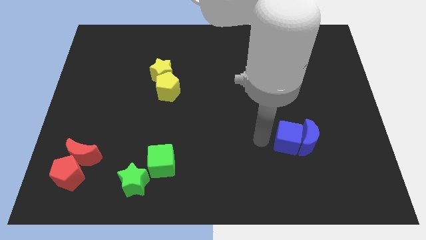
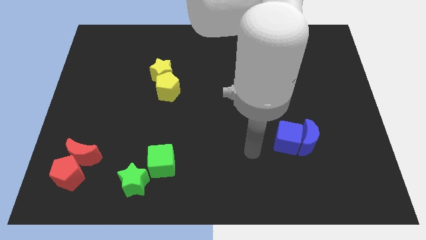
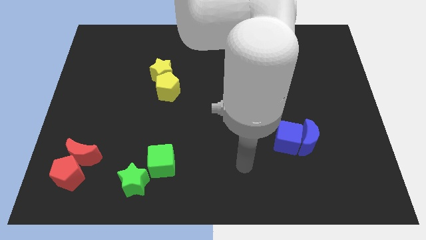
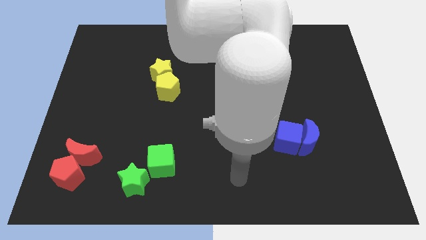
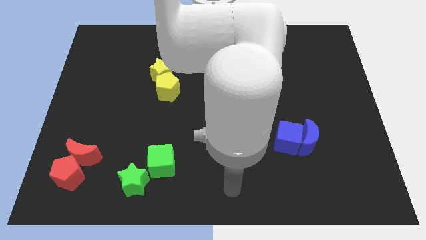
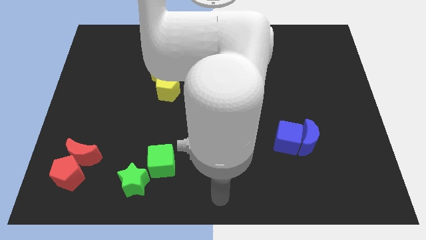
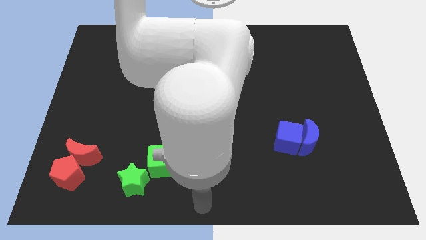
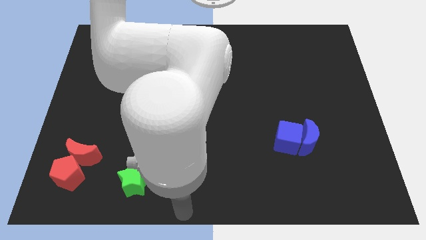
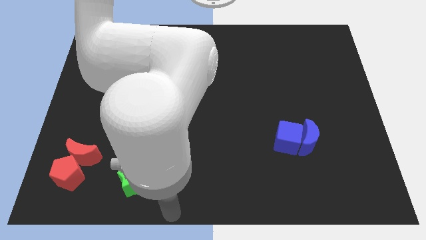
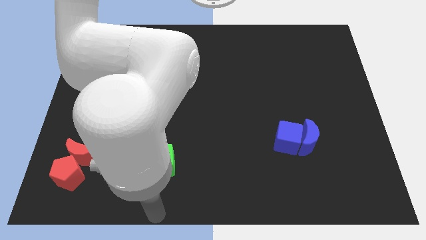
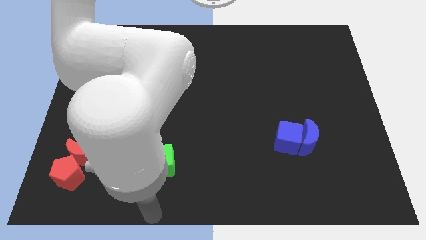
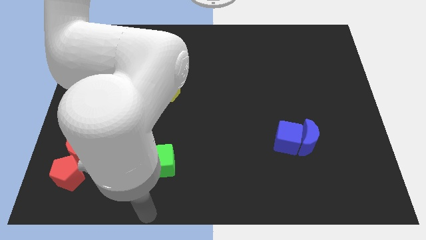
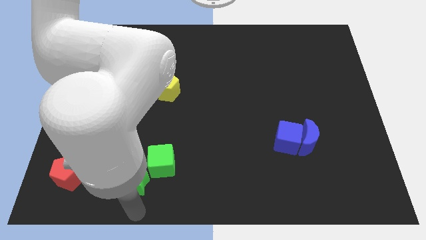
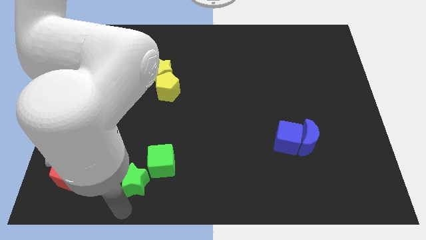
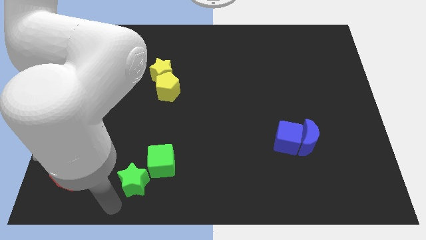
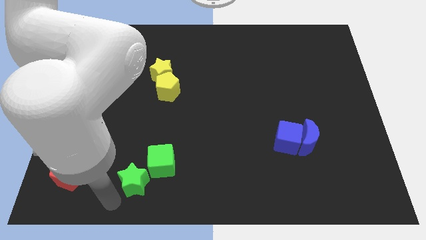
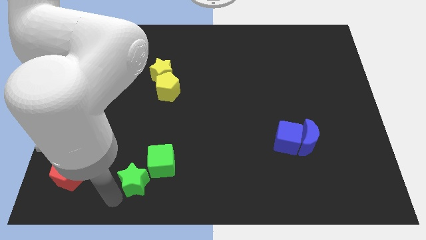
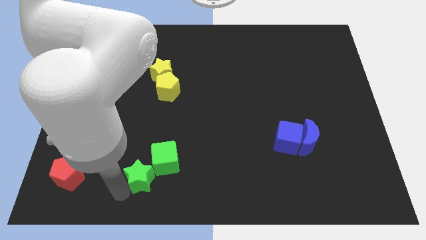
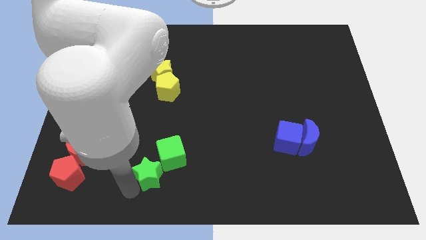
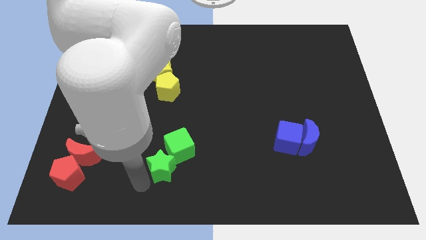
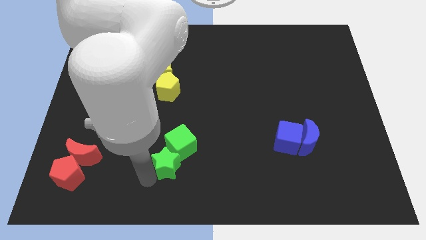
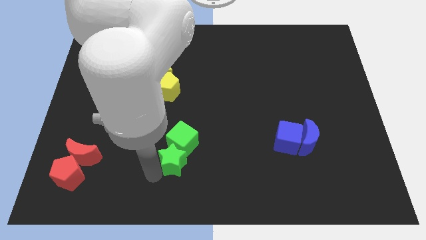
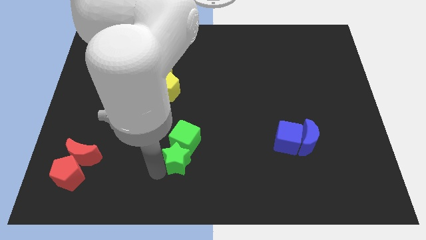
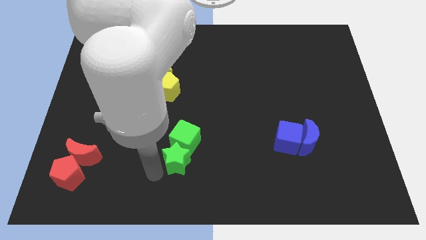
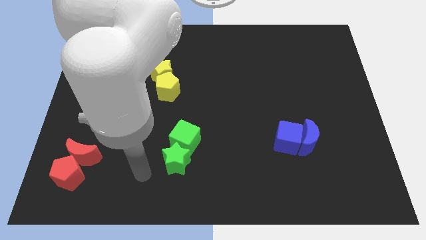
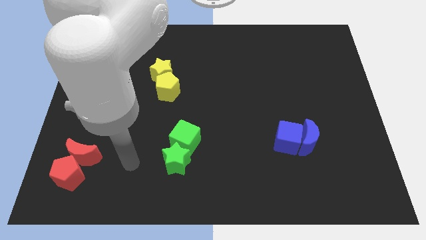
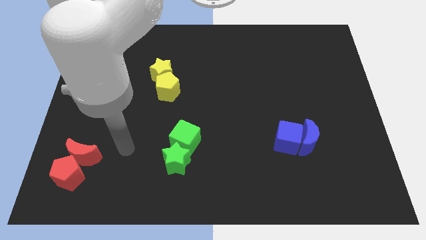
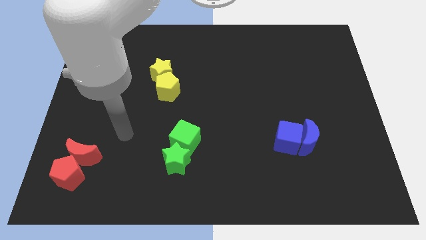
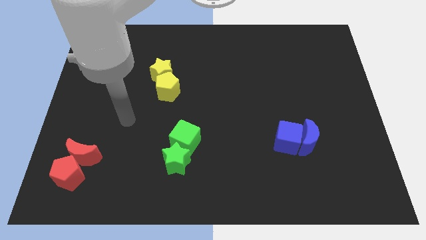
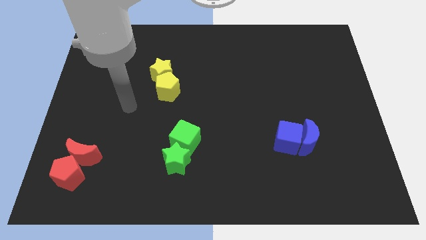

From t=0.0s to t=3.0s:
move the green blocks to the top of the board

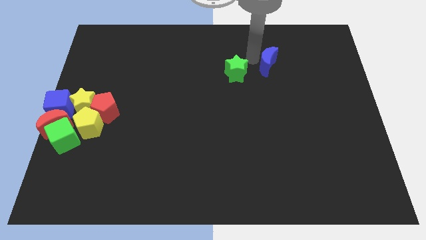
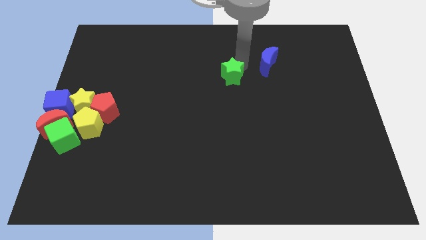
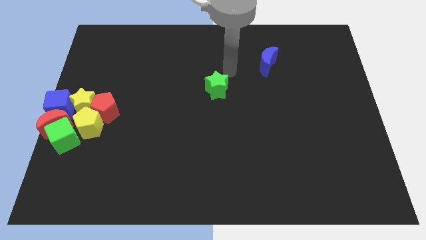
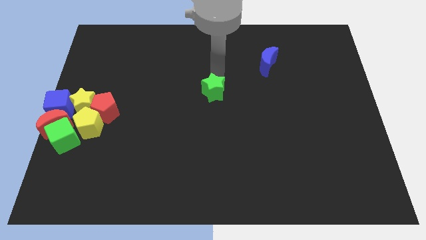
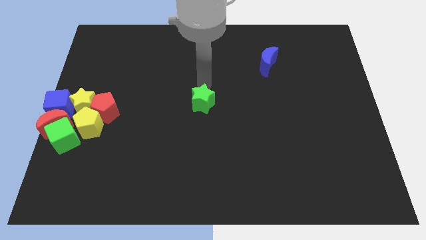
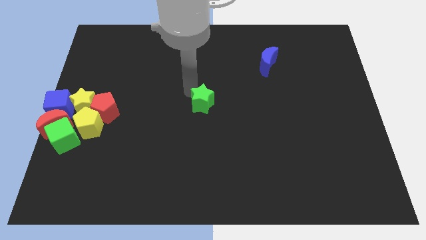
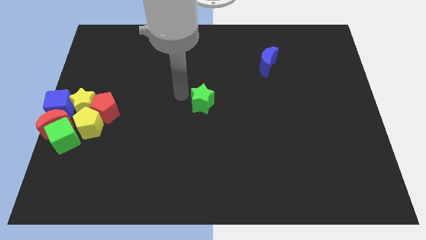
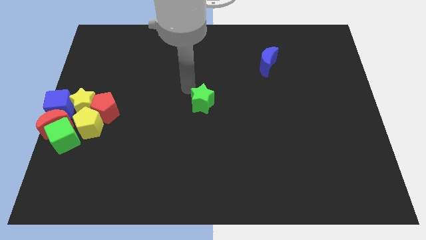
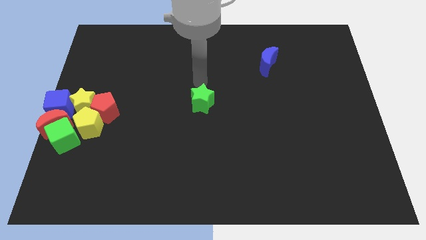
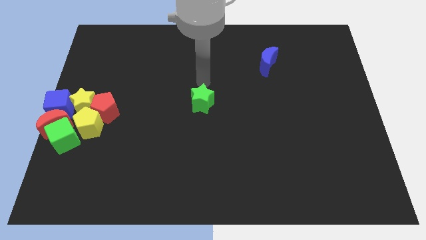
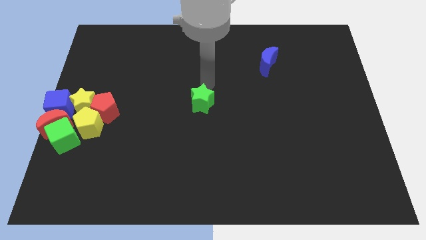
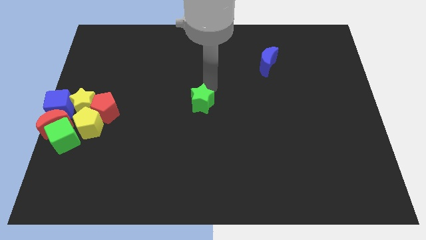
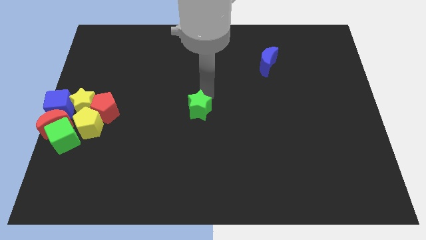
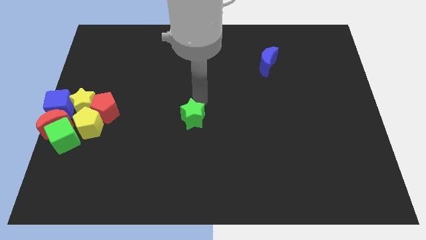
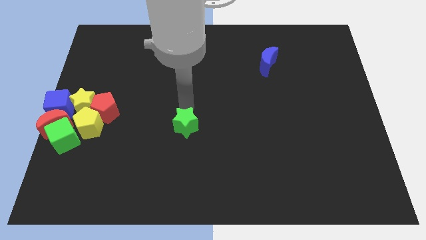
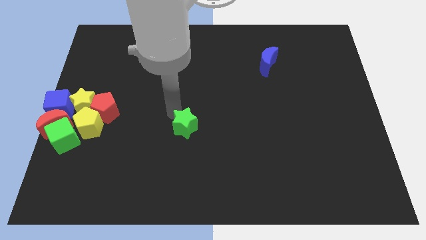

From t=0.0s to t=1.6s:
push the green star towards the center of the board

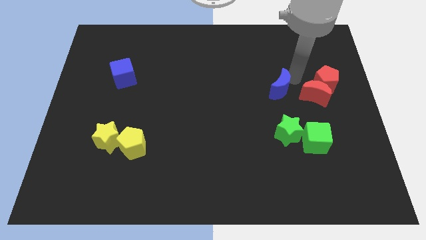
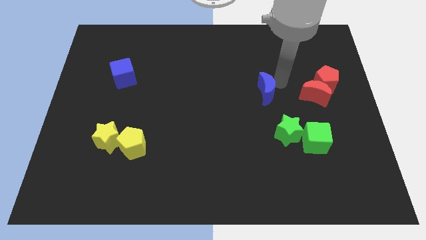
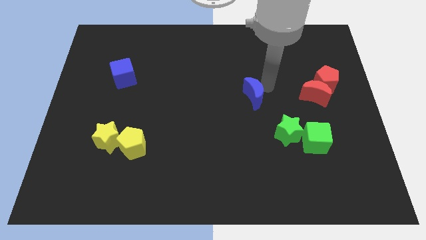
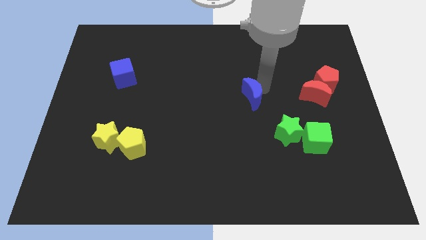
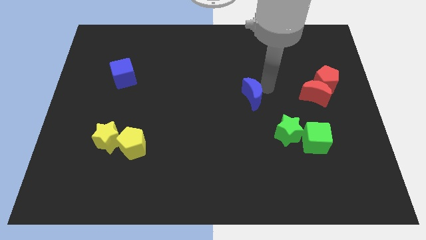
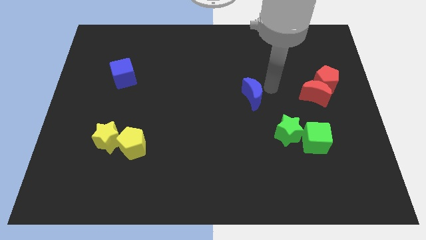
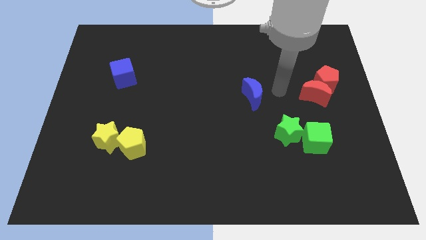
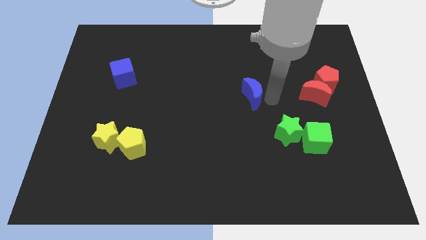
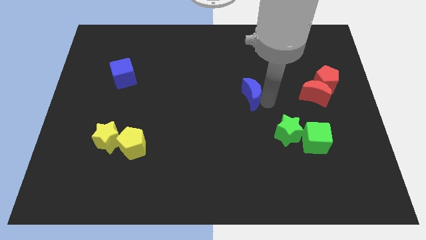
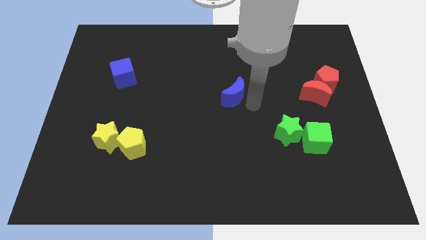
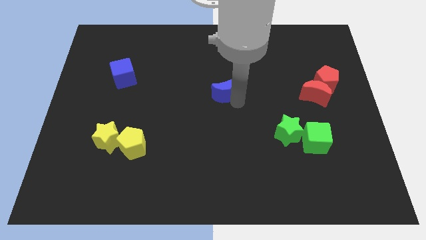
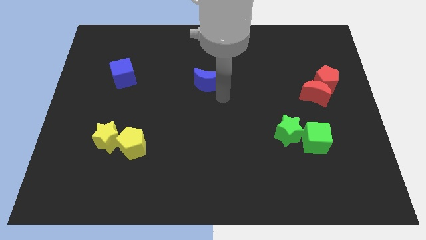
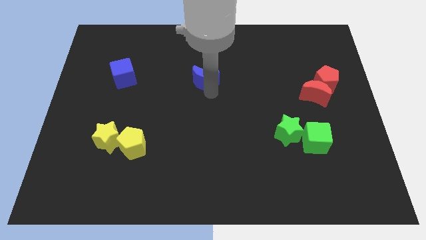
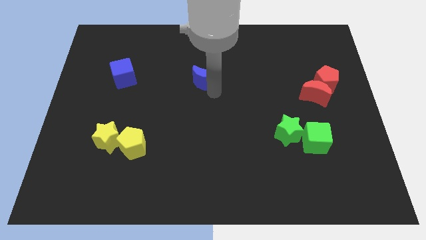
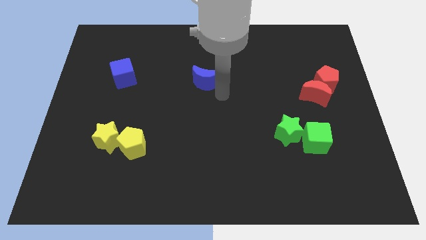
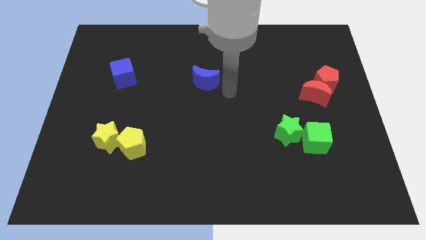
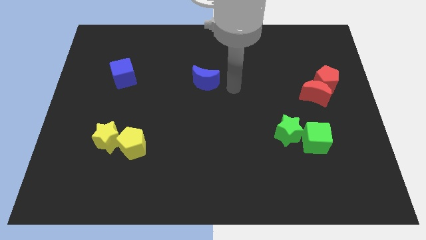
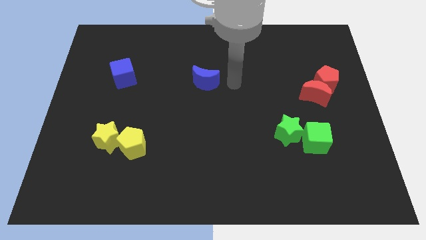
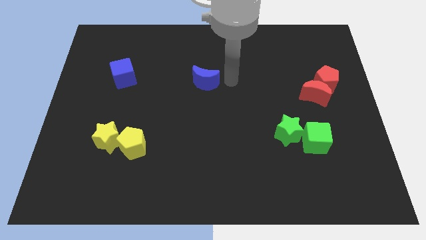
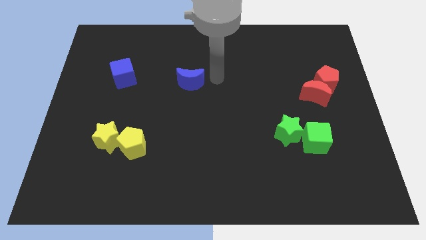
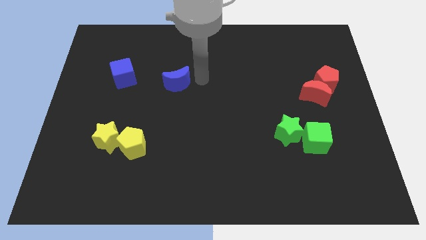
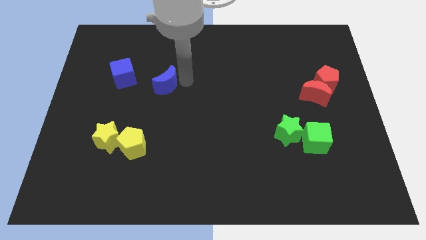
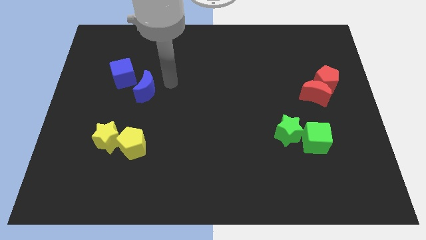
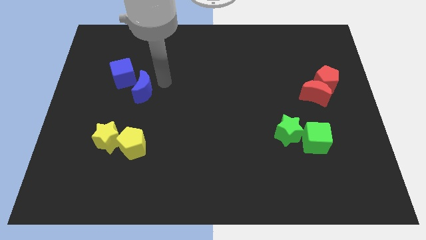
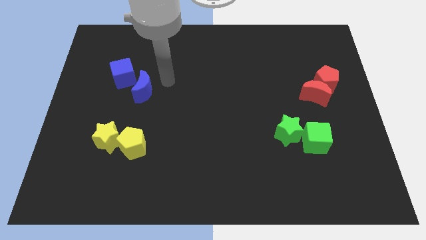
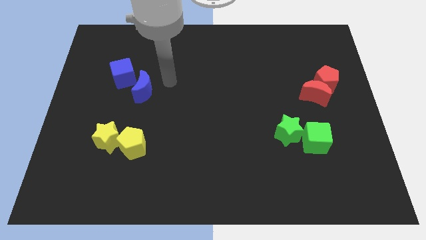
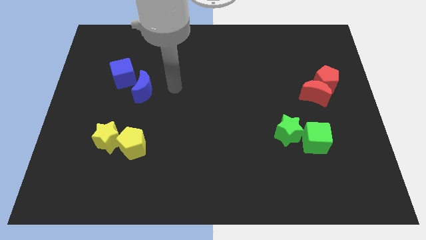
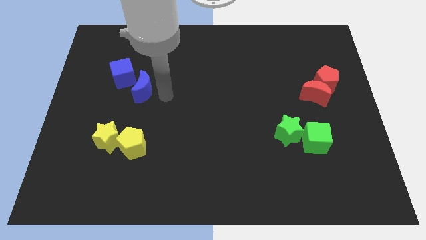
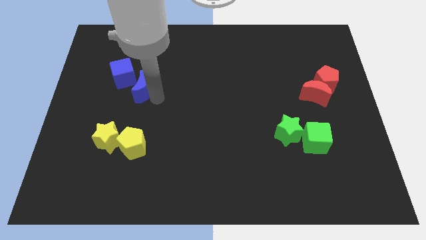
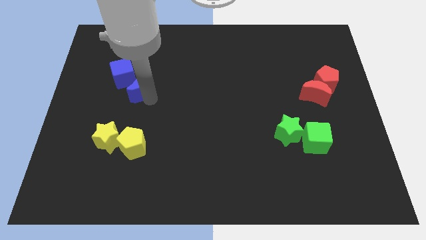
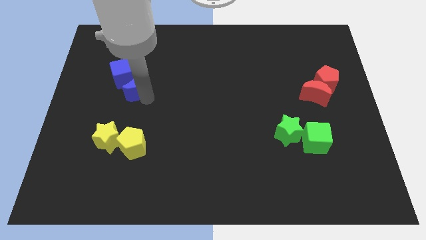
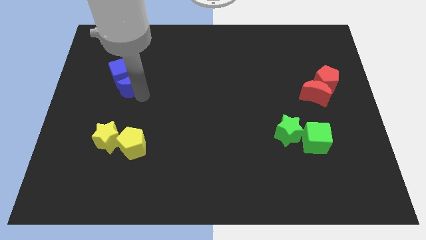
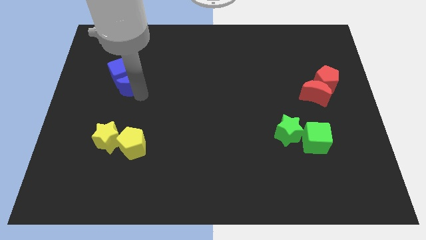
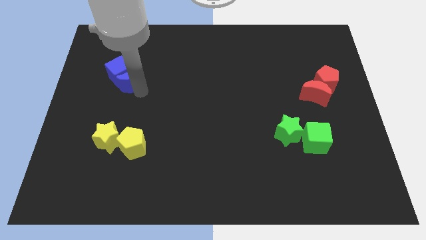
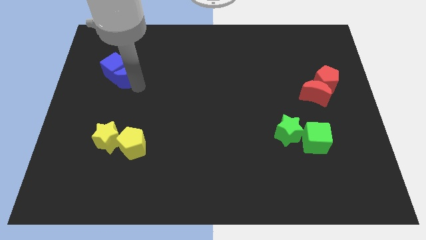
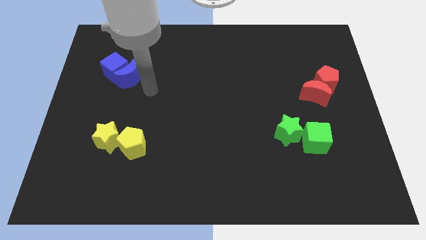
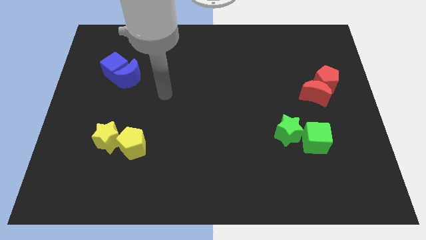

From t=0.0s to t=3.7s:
push the blue moon into the blue cube

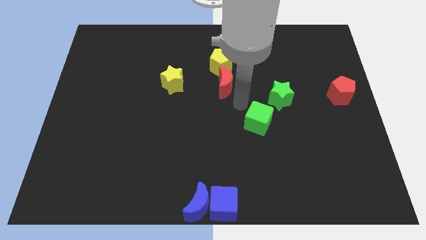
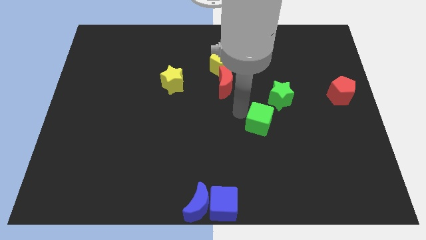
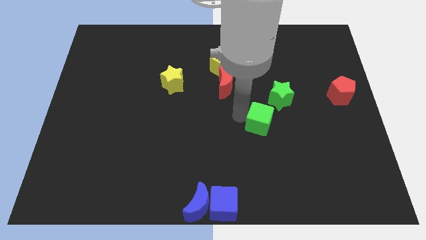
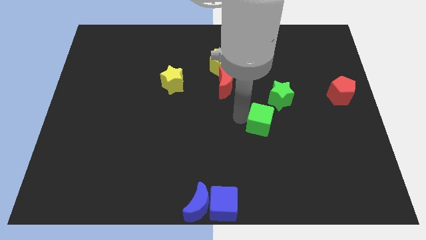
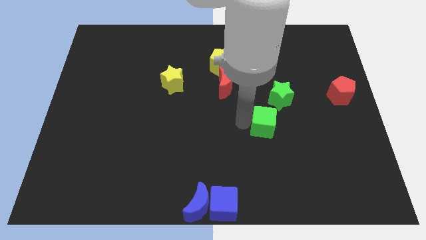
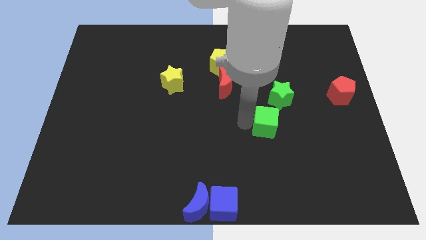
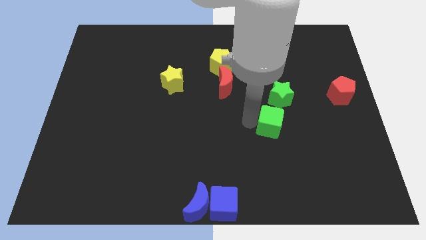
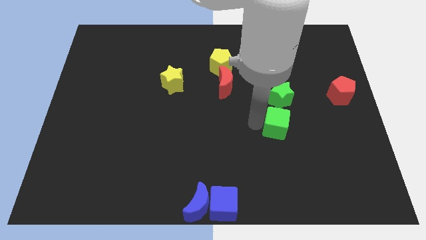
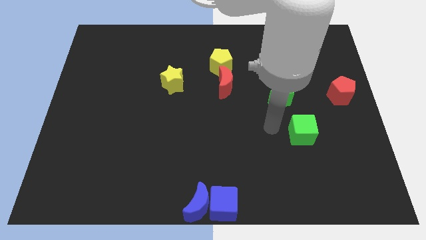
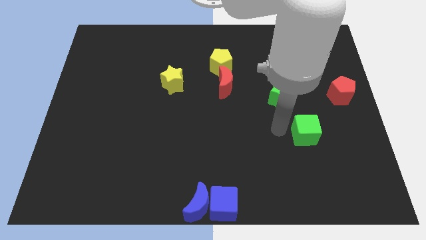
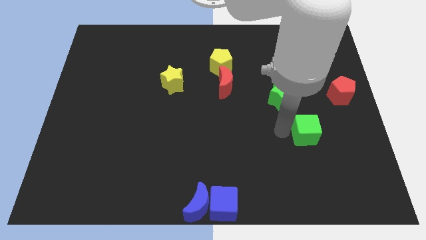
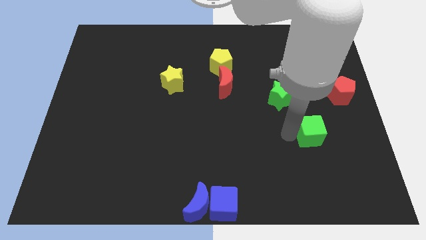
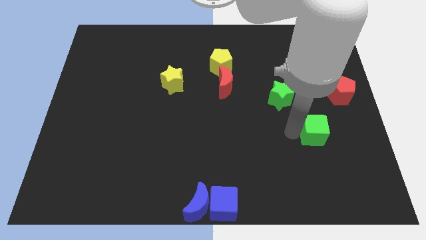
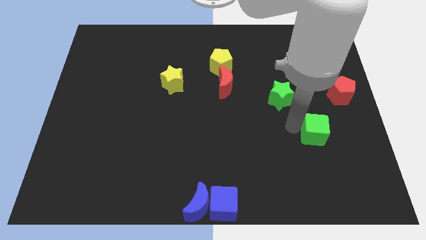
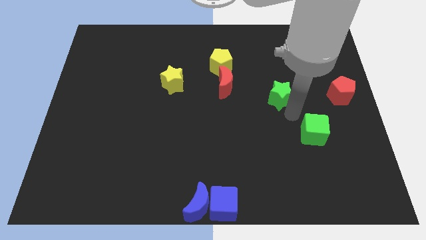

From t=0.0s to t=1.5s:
place the green cube at the bottom center of the green star and red pentagon
